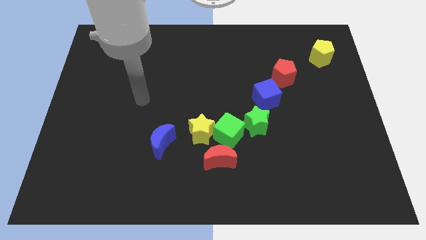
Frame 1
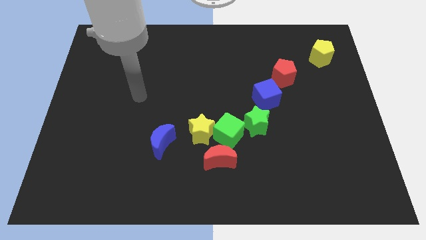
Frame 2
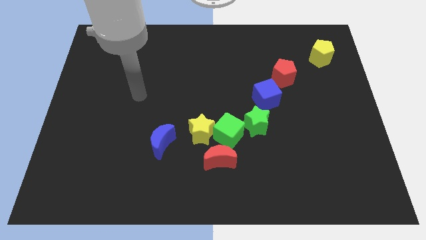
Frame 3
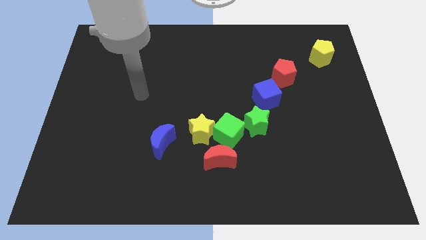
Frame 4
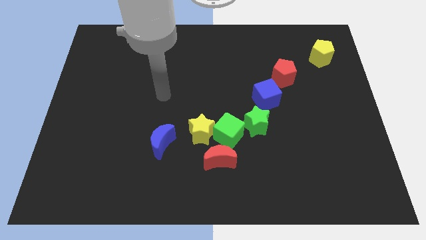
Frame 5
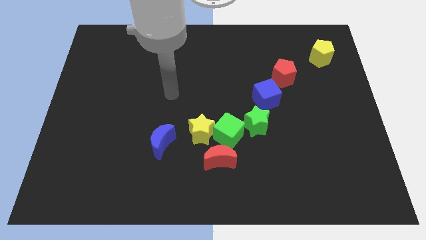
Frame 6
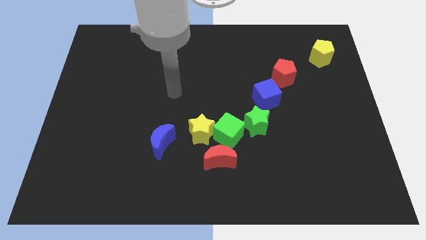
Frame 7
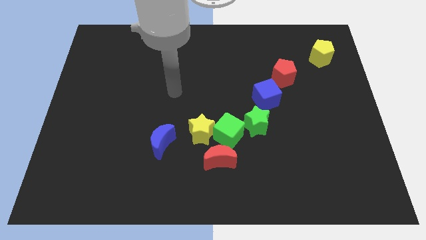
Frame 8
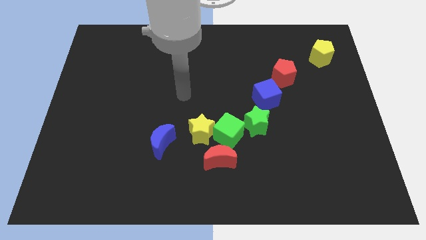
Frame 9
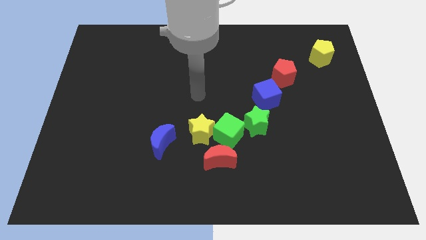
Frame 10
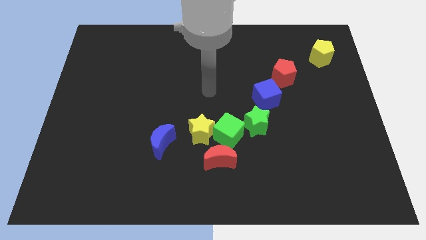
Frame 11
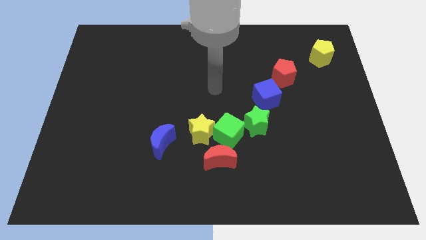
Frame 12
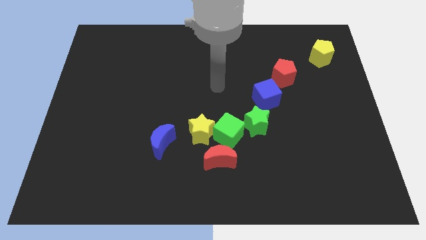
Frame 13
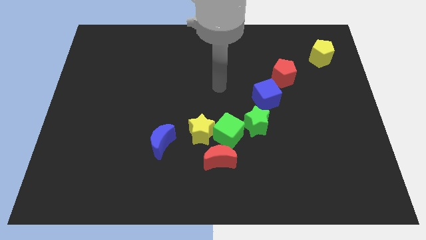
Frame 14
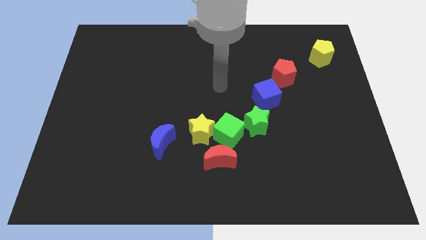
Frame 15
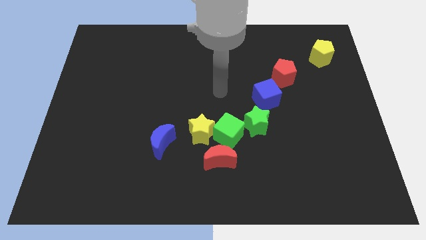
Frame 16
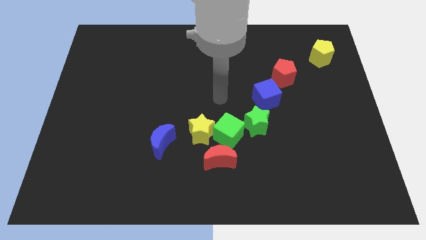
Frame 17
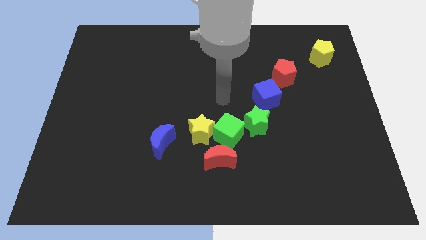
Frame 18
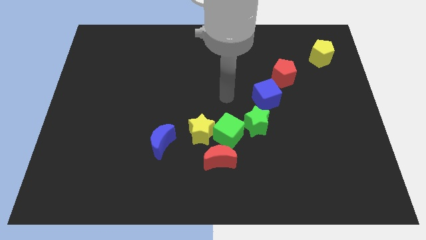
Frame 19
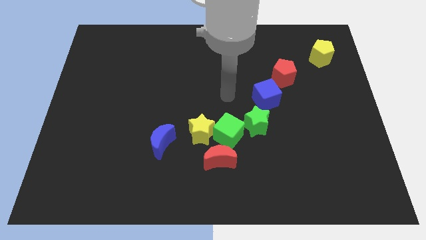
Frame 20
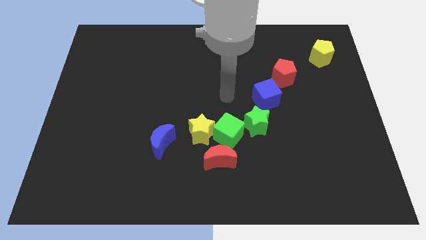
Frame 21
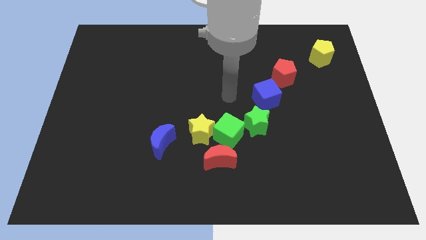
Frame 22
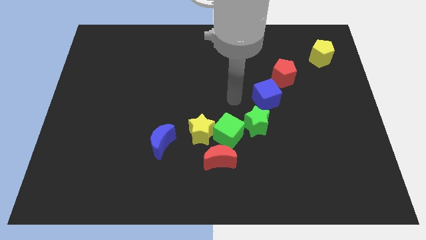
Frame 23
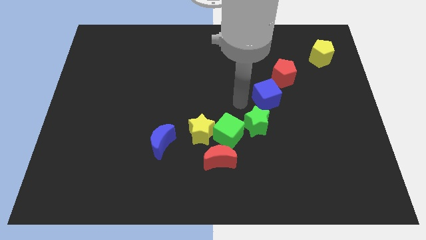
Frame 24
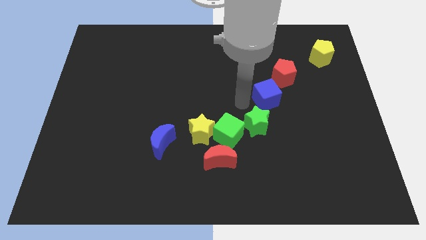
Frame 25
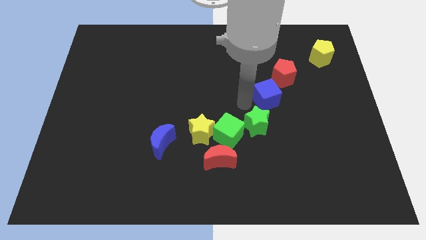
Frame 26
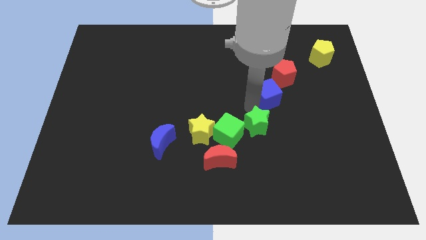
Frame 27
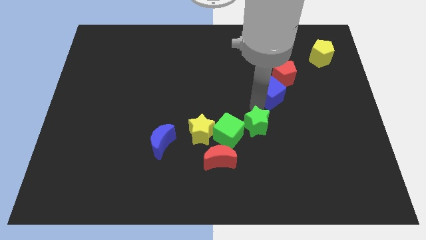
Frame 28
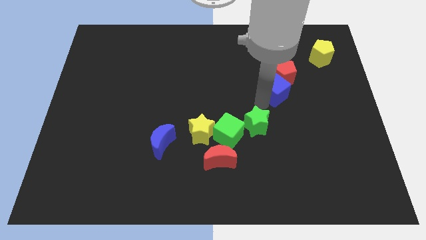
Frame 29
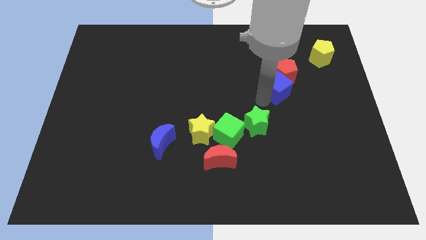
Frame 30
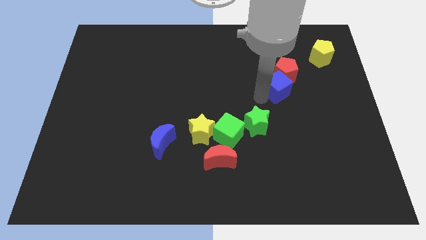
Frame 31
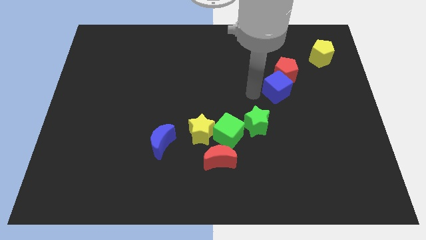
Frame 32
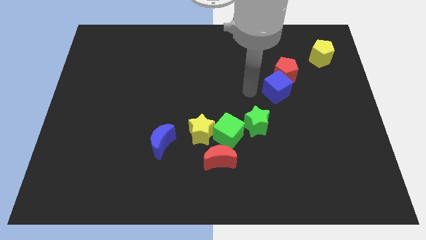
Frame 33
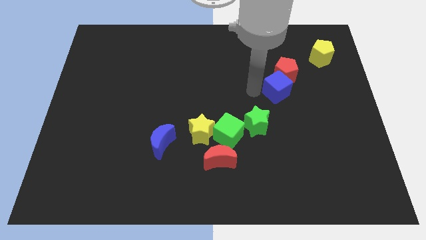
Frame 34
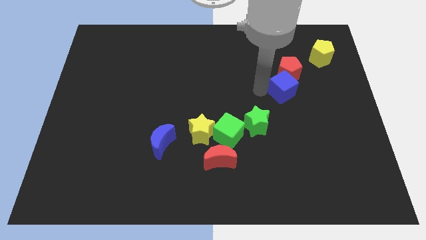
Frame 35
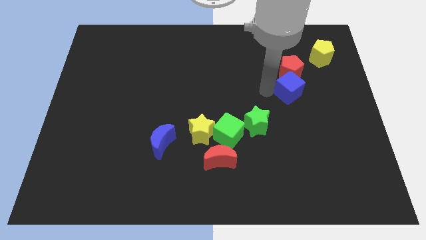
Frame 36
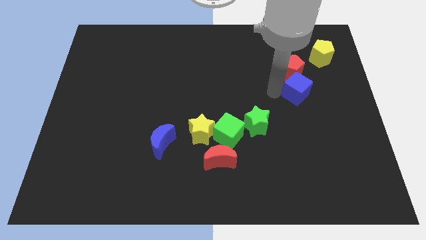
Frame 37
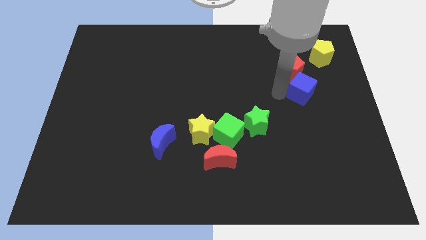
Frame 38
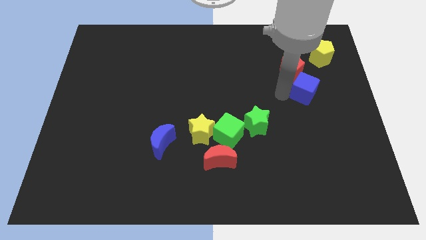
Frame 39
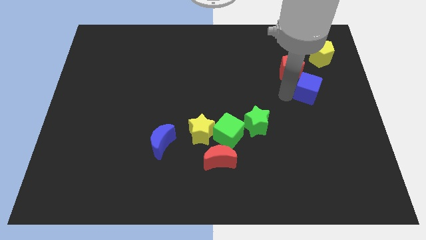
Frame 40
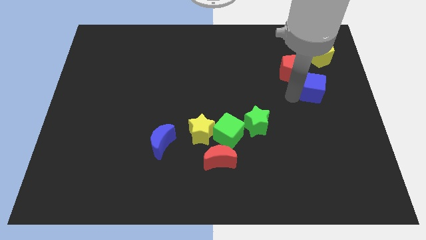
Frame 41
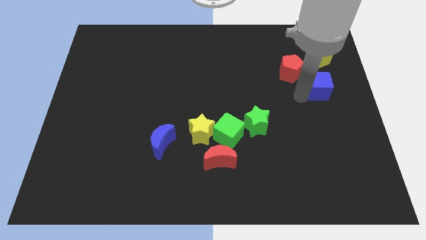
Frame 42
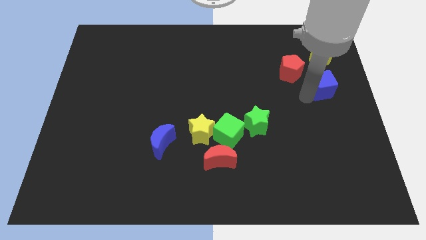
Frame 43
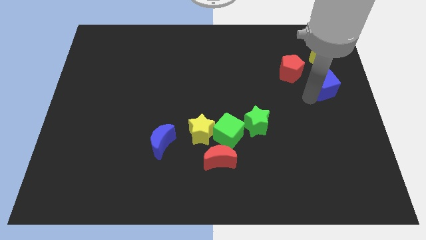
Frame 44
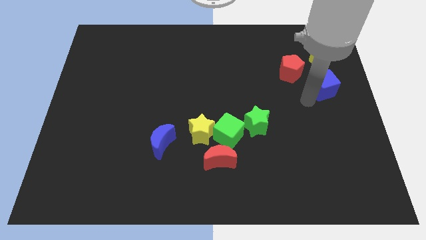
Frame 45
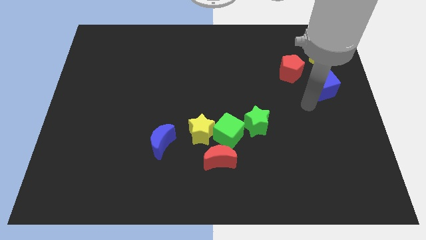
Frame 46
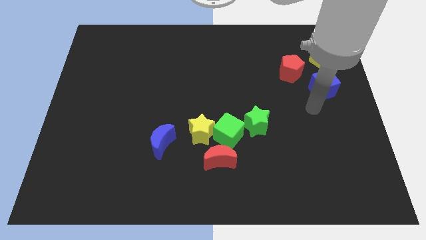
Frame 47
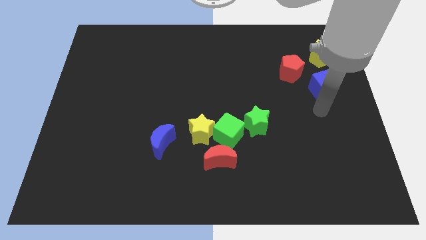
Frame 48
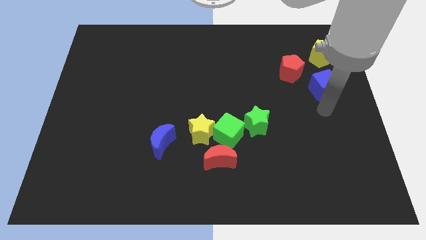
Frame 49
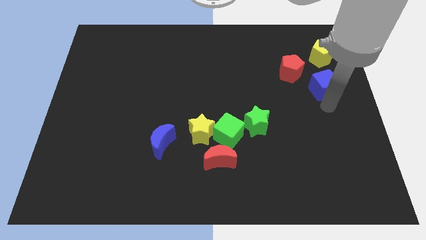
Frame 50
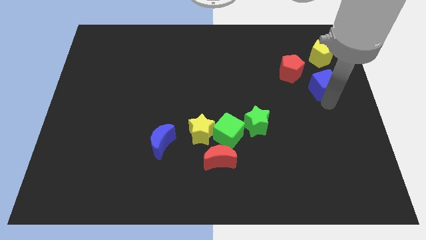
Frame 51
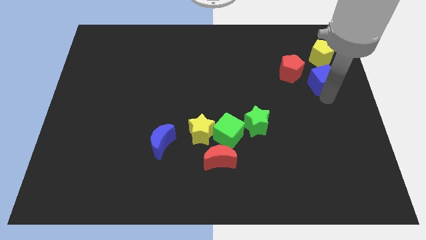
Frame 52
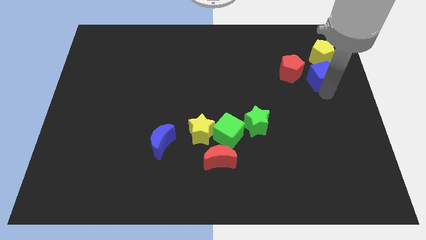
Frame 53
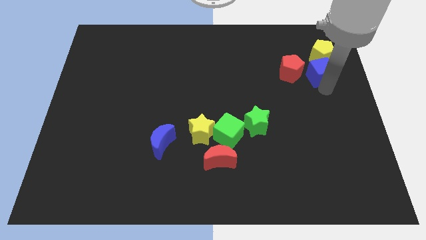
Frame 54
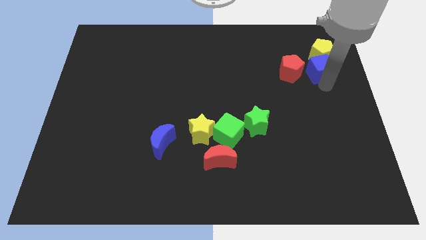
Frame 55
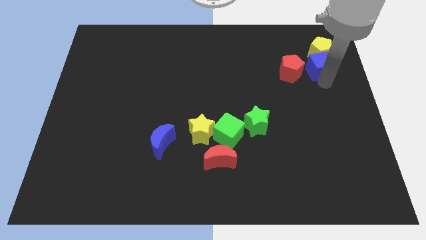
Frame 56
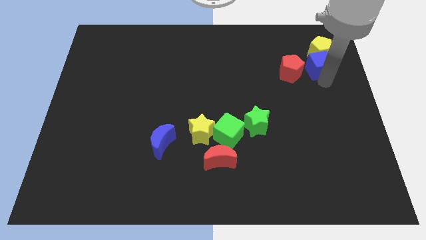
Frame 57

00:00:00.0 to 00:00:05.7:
push the blue cube close to the yellow pentagon

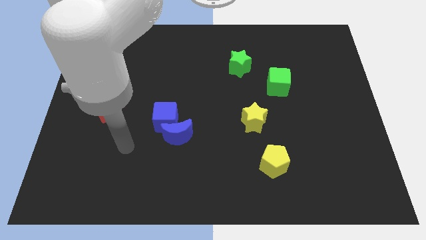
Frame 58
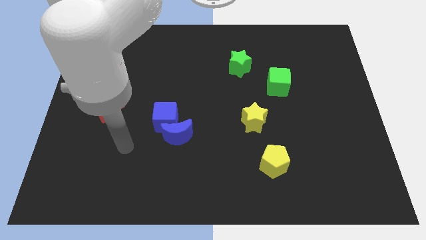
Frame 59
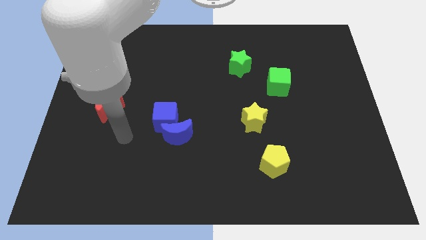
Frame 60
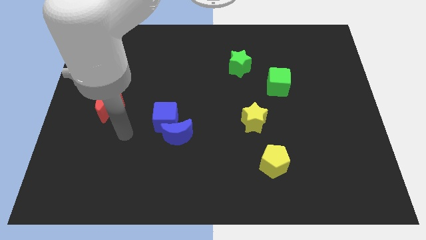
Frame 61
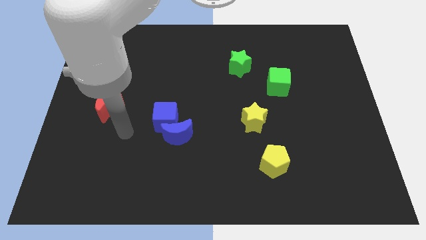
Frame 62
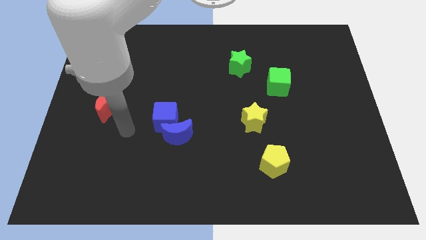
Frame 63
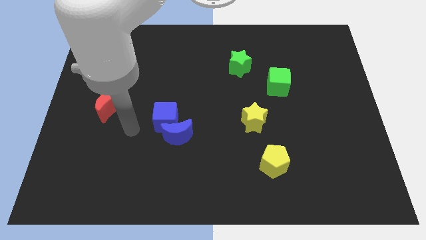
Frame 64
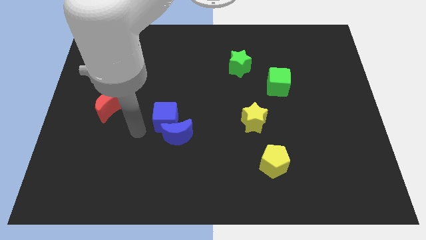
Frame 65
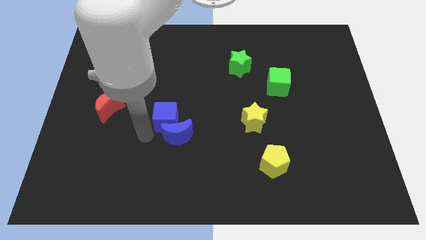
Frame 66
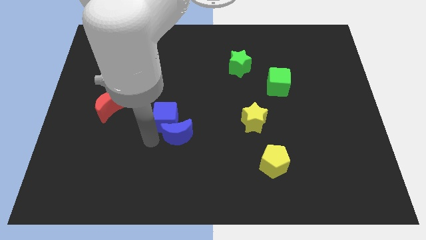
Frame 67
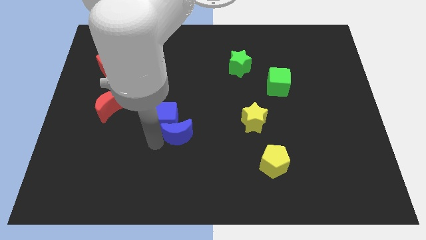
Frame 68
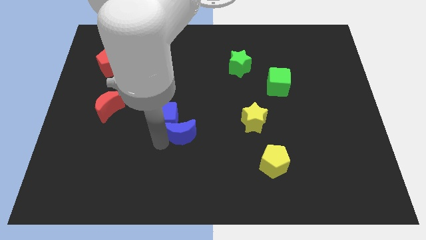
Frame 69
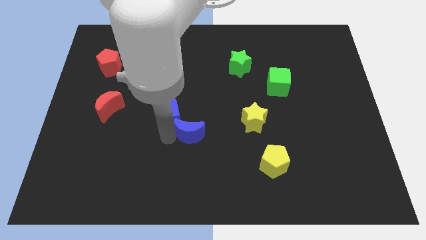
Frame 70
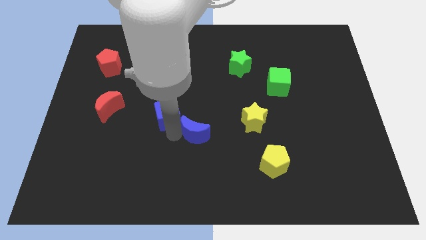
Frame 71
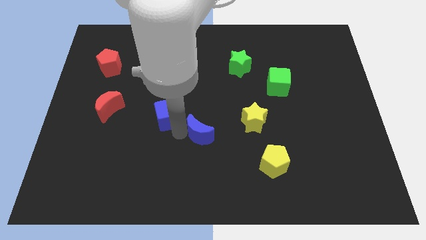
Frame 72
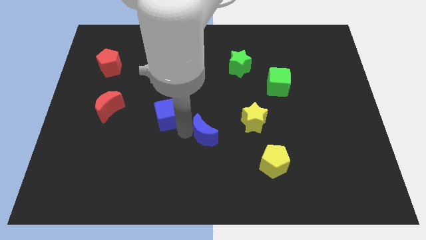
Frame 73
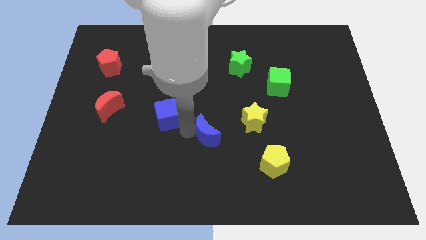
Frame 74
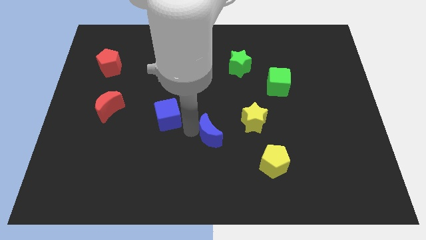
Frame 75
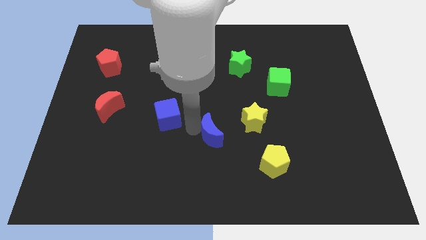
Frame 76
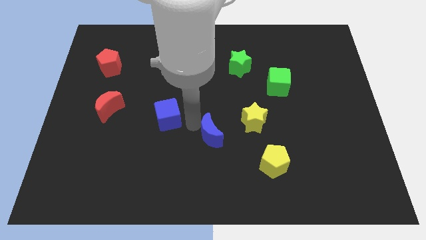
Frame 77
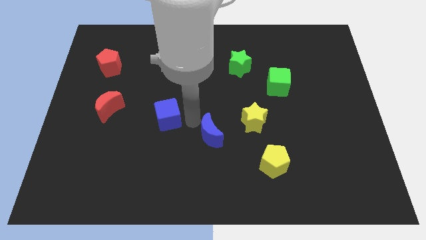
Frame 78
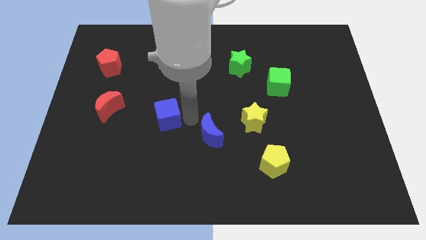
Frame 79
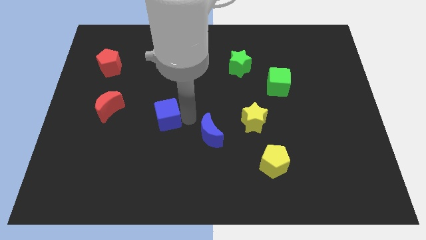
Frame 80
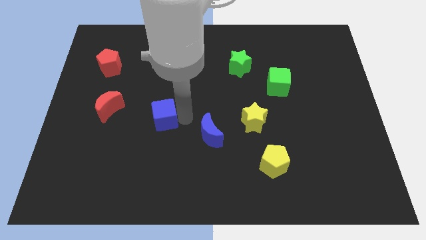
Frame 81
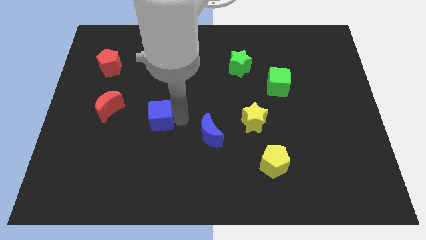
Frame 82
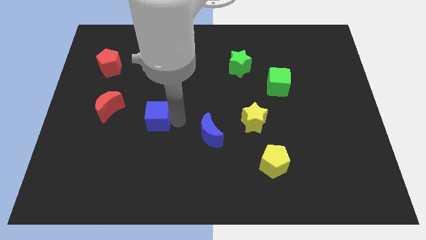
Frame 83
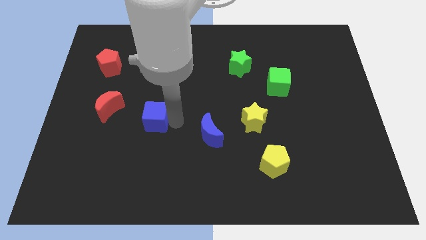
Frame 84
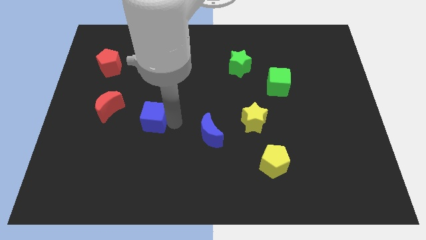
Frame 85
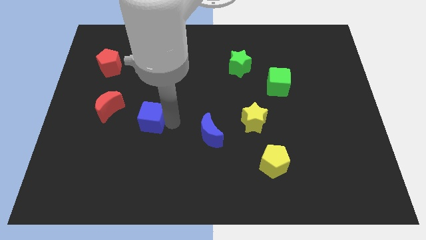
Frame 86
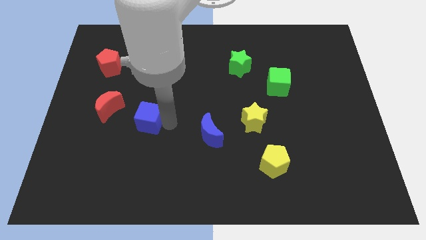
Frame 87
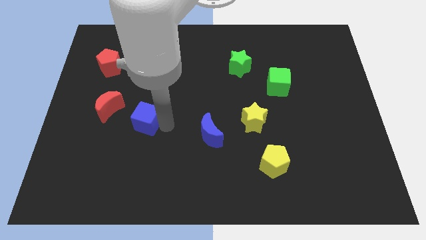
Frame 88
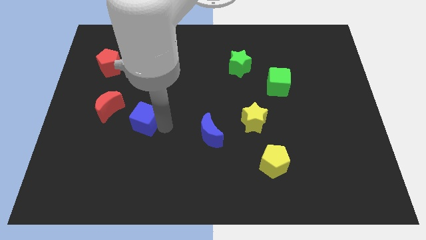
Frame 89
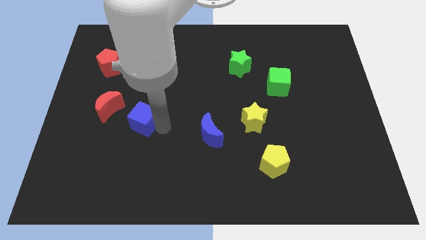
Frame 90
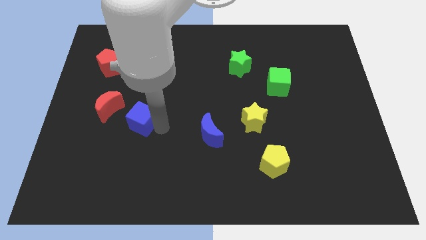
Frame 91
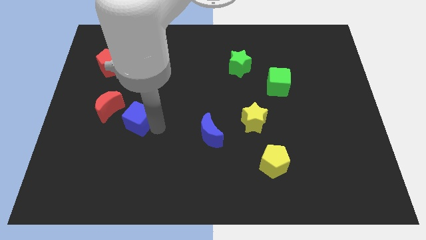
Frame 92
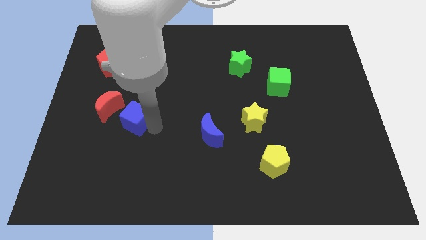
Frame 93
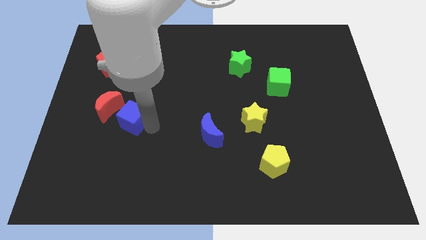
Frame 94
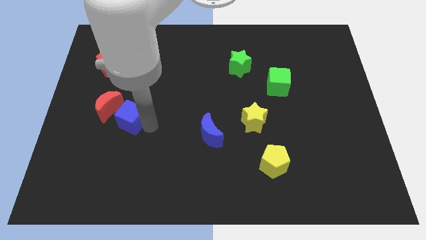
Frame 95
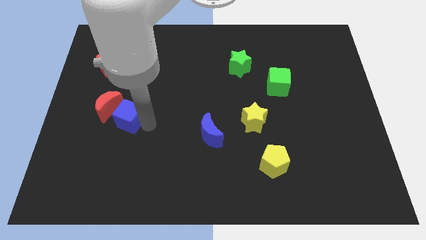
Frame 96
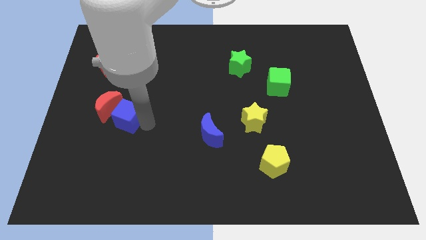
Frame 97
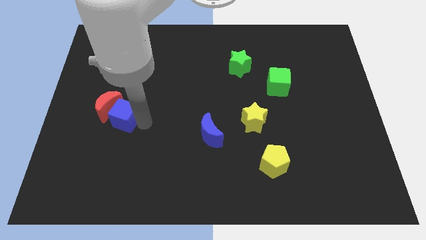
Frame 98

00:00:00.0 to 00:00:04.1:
move the blue cube next to the red moon
